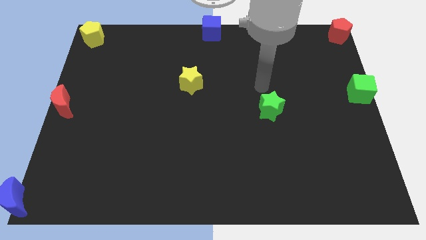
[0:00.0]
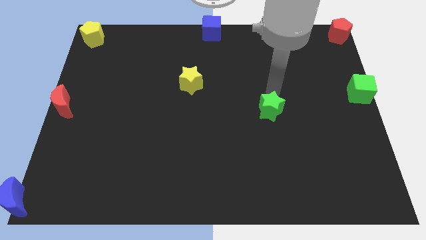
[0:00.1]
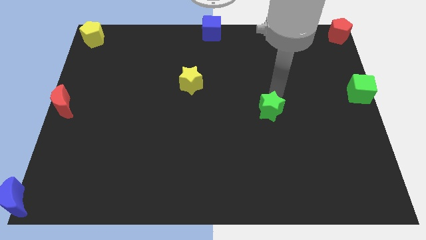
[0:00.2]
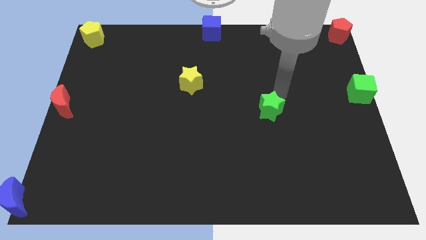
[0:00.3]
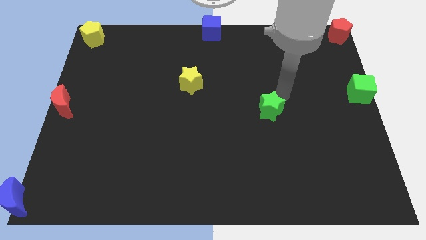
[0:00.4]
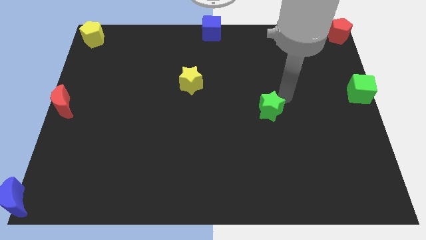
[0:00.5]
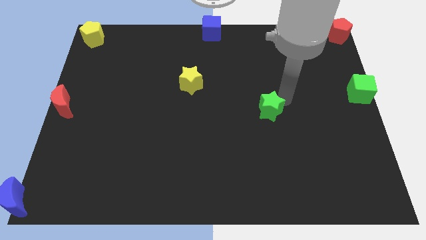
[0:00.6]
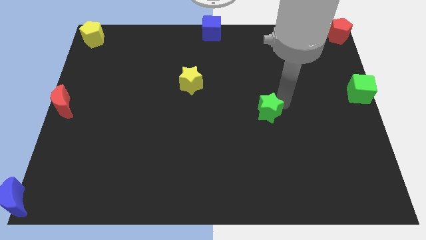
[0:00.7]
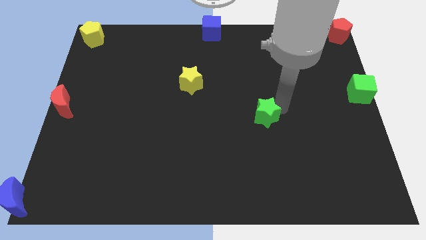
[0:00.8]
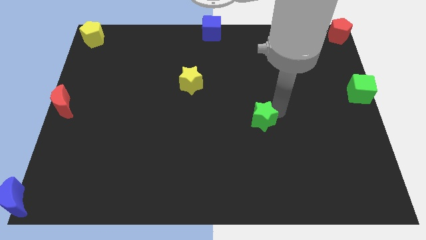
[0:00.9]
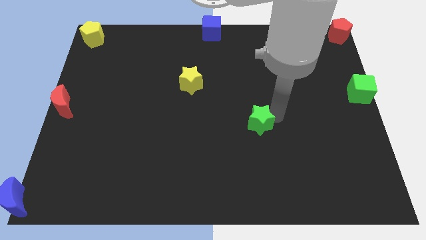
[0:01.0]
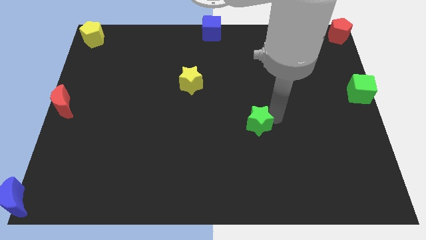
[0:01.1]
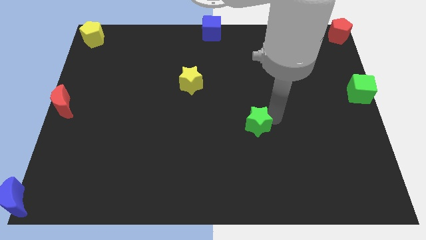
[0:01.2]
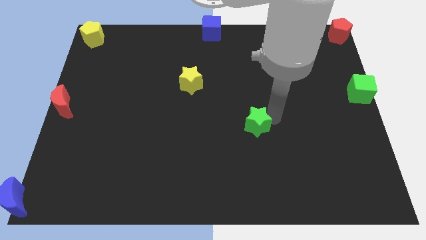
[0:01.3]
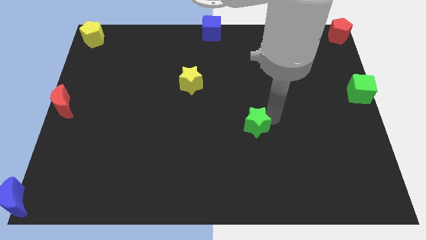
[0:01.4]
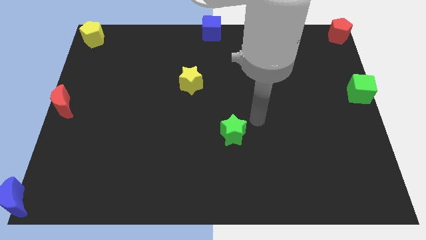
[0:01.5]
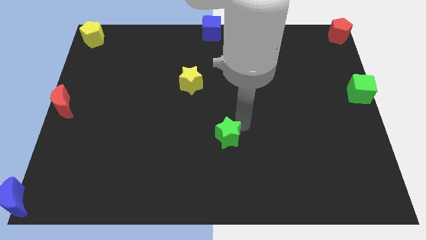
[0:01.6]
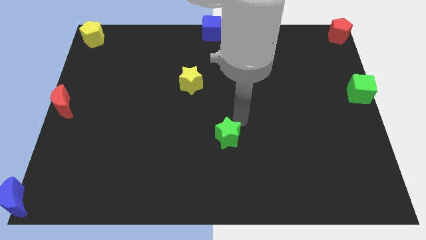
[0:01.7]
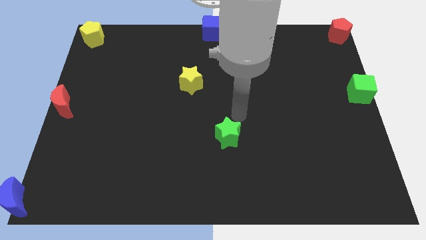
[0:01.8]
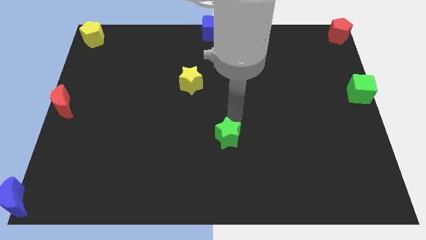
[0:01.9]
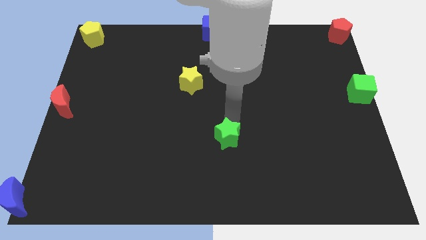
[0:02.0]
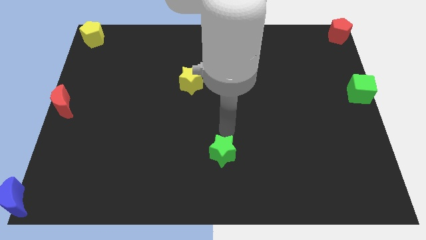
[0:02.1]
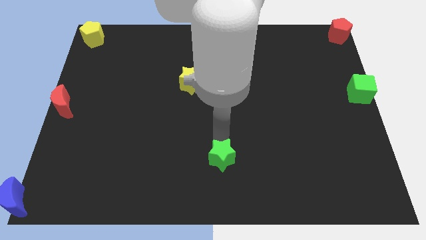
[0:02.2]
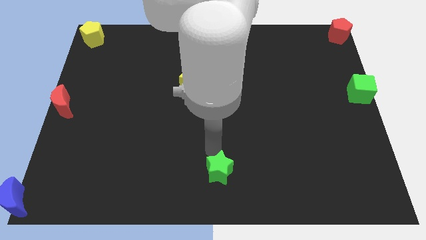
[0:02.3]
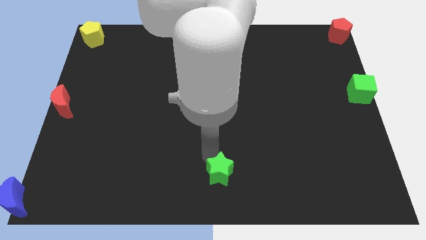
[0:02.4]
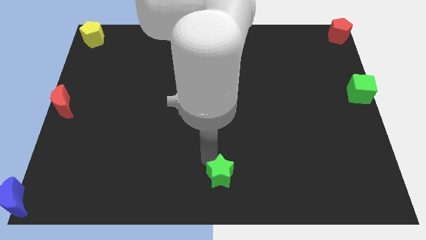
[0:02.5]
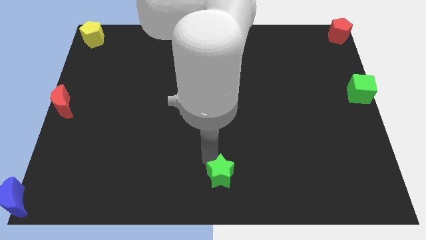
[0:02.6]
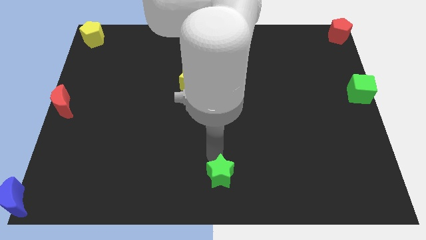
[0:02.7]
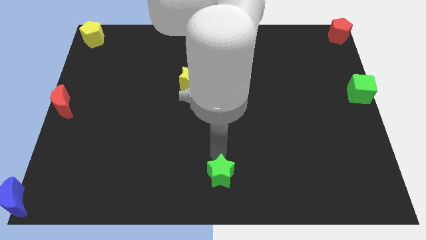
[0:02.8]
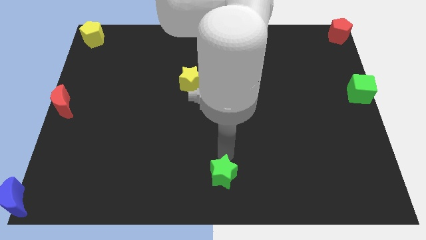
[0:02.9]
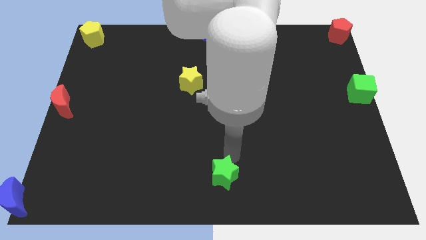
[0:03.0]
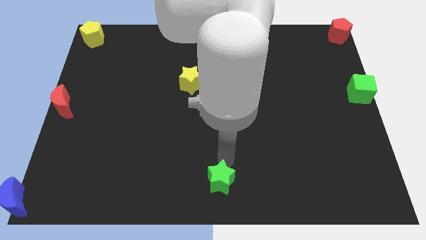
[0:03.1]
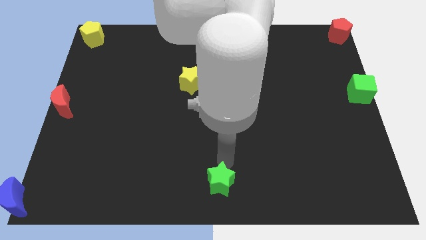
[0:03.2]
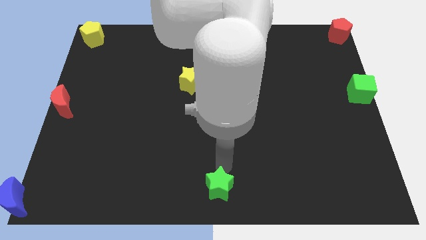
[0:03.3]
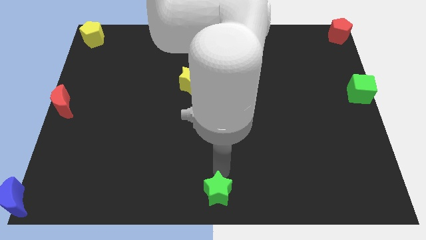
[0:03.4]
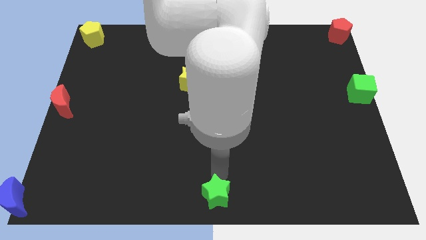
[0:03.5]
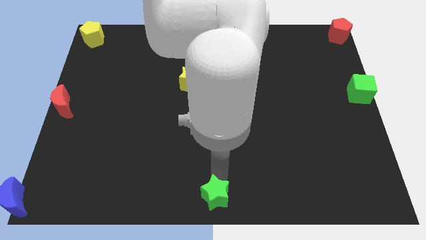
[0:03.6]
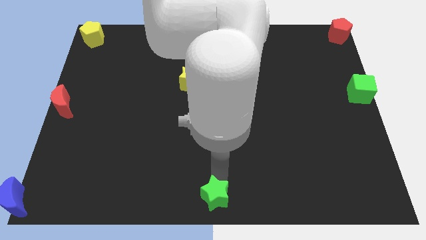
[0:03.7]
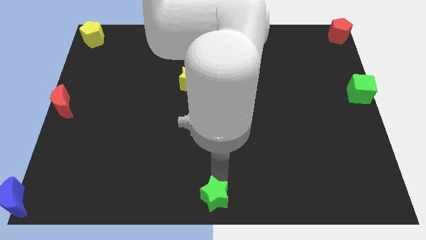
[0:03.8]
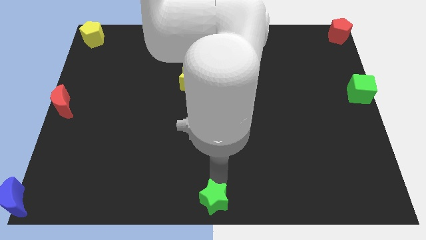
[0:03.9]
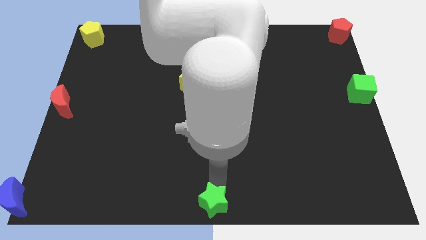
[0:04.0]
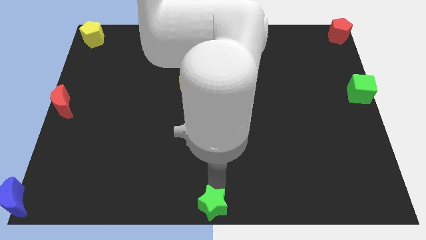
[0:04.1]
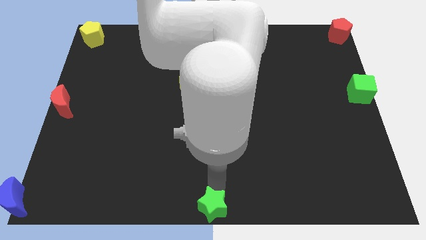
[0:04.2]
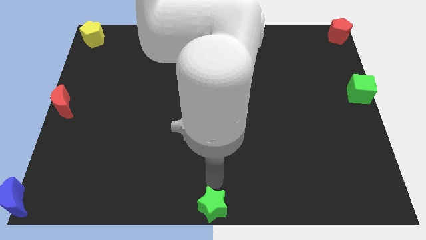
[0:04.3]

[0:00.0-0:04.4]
push the green star to the bottom center of the board

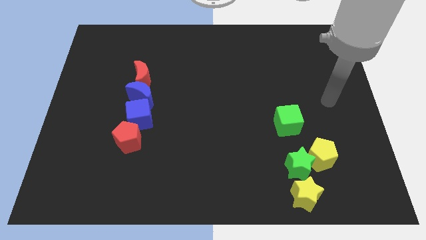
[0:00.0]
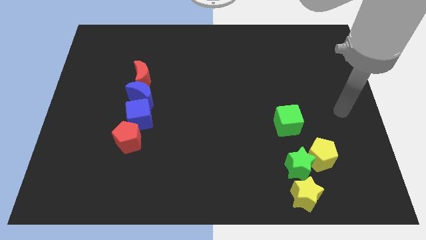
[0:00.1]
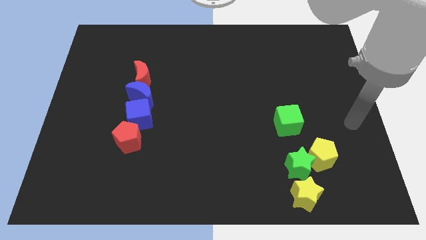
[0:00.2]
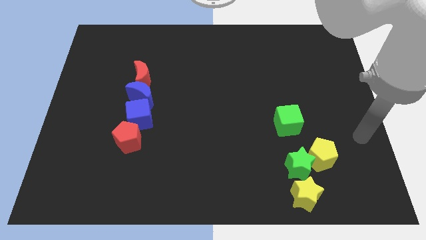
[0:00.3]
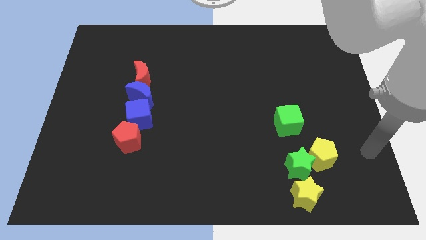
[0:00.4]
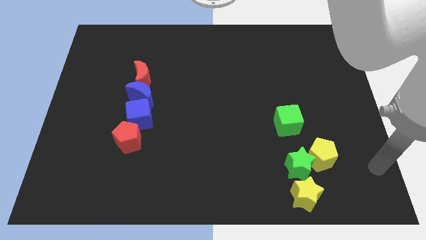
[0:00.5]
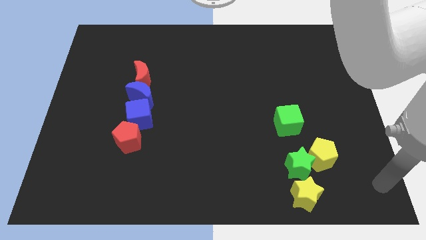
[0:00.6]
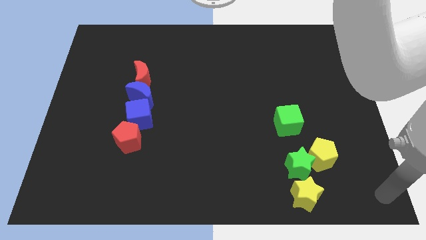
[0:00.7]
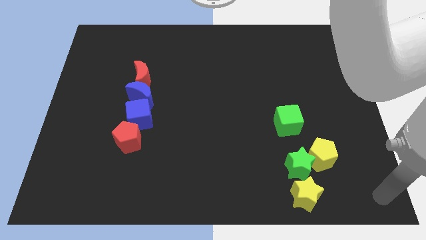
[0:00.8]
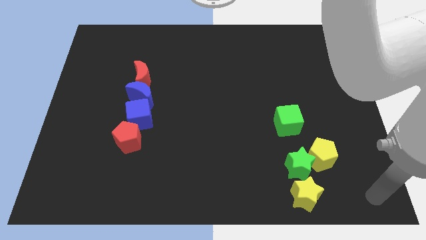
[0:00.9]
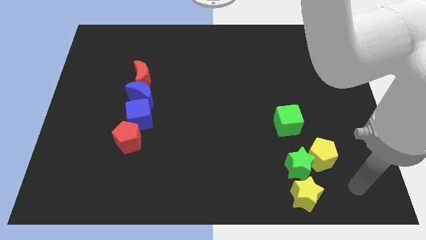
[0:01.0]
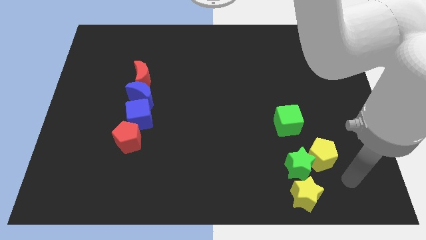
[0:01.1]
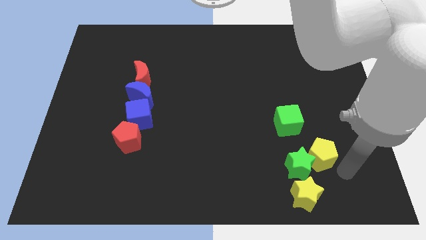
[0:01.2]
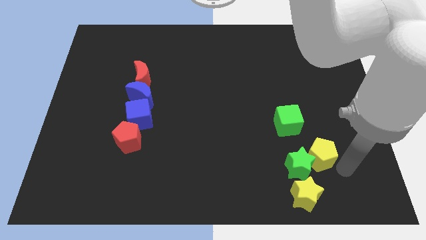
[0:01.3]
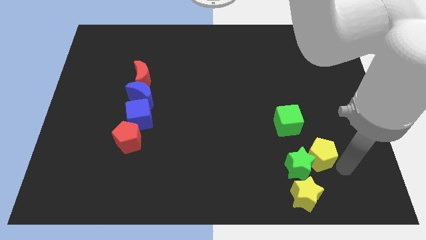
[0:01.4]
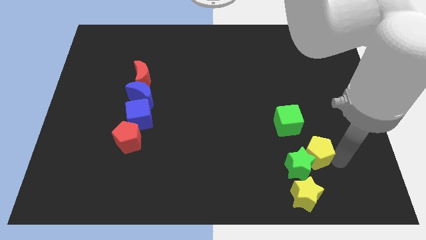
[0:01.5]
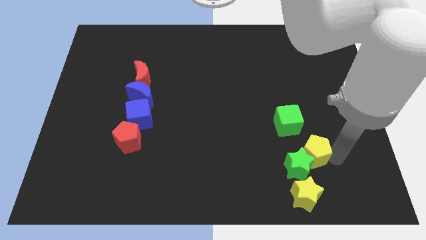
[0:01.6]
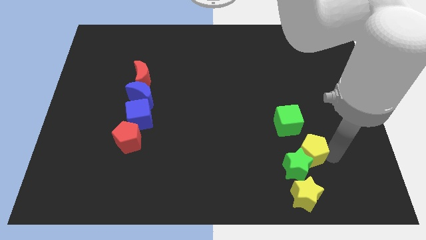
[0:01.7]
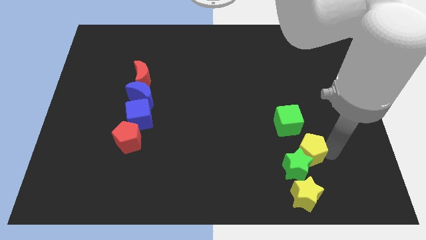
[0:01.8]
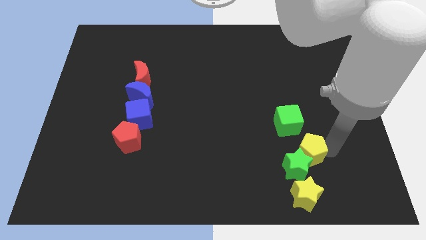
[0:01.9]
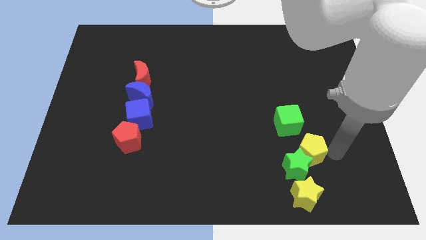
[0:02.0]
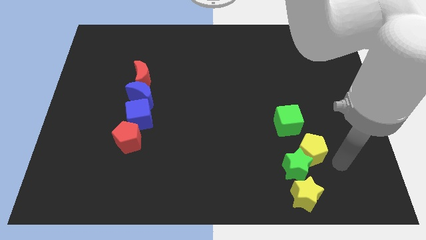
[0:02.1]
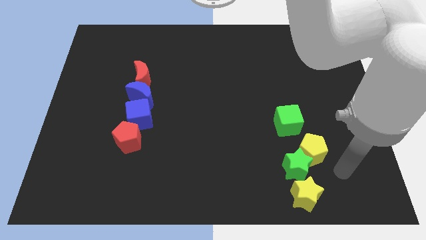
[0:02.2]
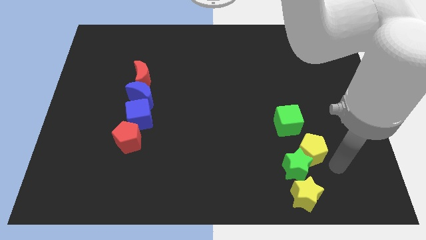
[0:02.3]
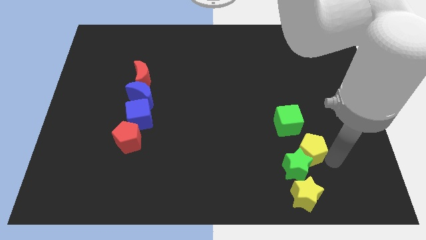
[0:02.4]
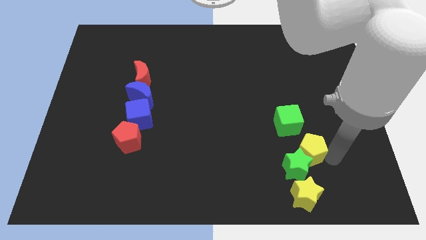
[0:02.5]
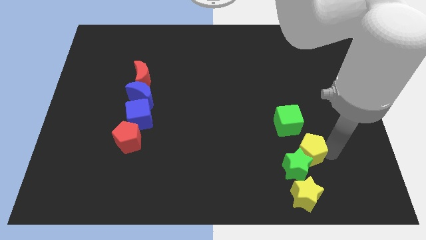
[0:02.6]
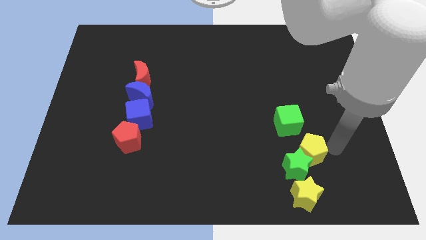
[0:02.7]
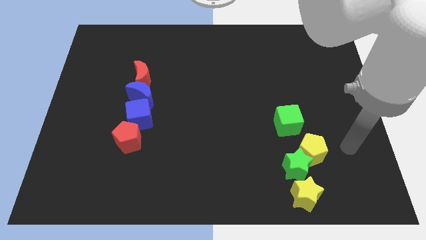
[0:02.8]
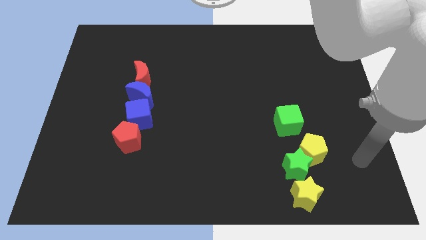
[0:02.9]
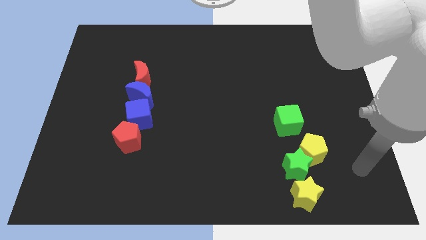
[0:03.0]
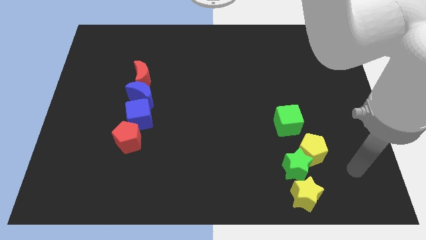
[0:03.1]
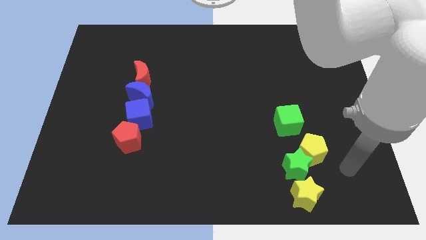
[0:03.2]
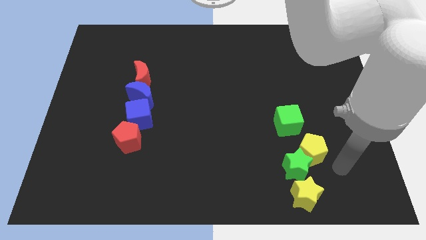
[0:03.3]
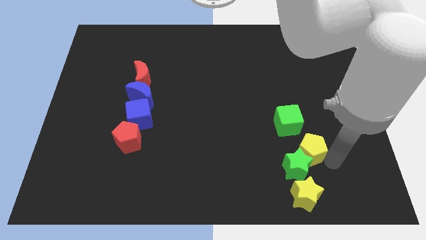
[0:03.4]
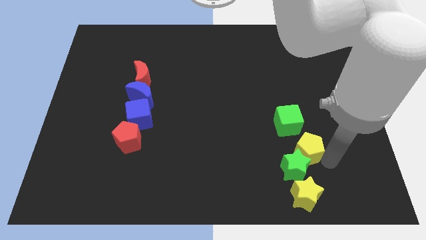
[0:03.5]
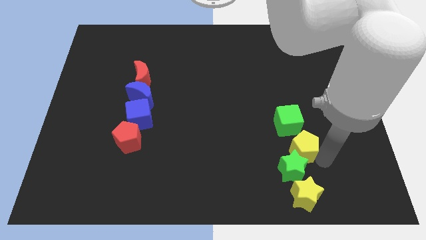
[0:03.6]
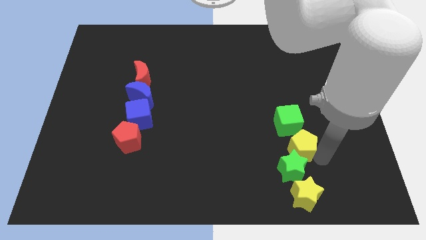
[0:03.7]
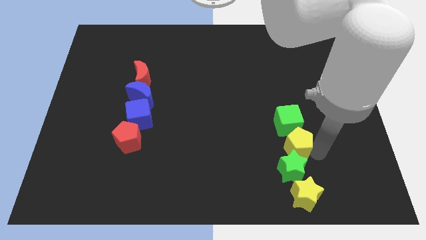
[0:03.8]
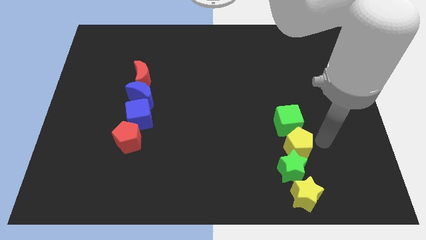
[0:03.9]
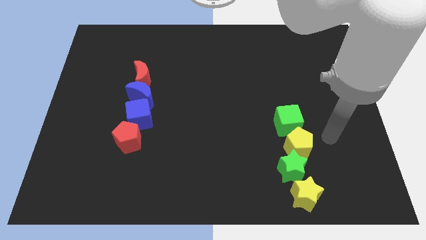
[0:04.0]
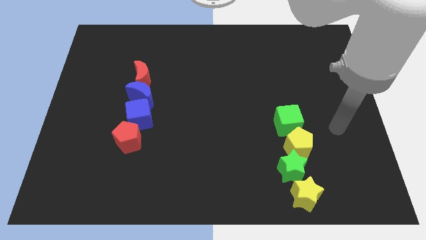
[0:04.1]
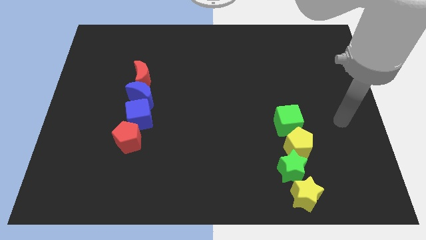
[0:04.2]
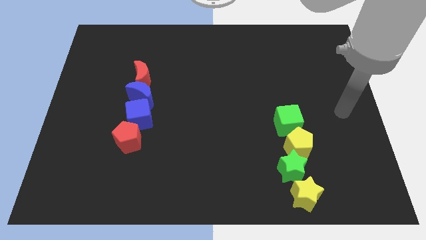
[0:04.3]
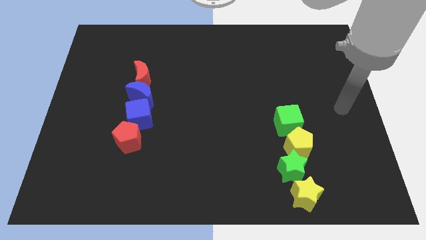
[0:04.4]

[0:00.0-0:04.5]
push the yellow pentagon between the green star and green cube
